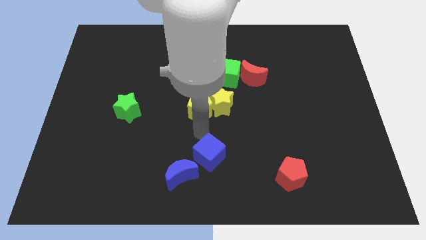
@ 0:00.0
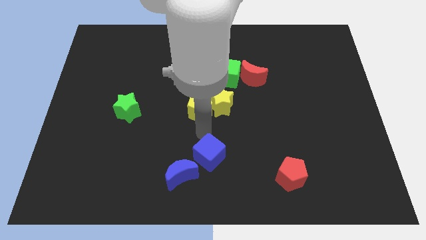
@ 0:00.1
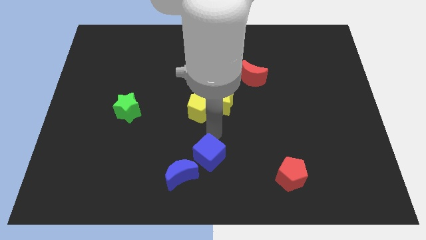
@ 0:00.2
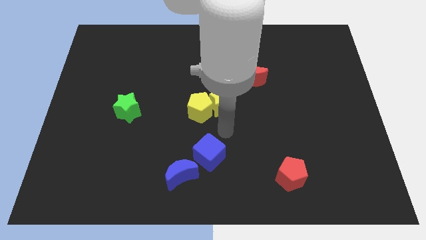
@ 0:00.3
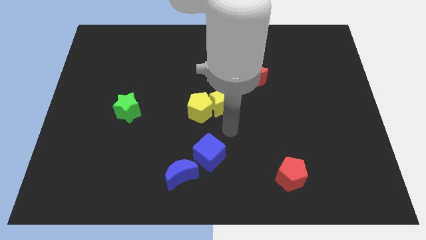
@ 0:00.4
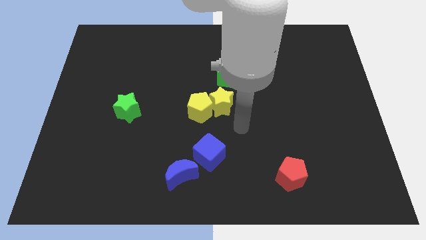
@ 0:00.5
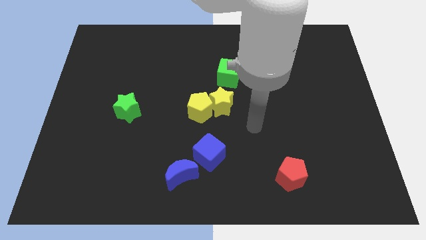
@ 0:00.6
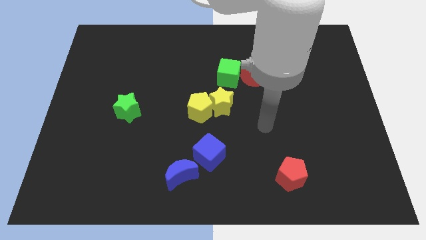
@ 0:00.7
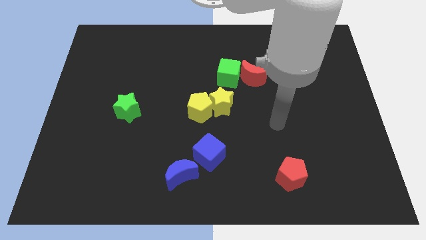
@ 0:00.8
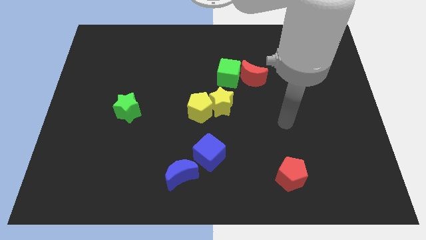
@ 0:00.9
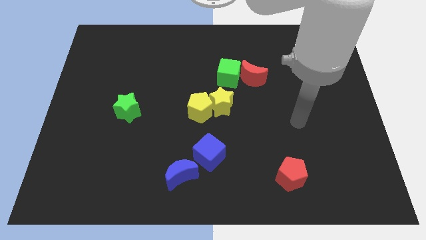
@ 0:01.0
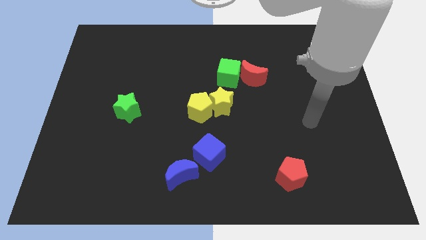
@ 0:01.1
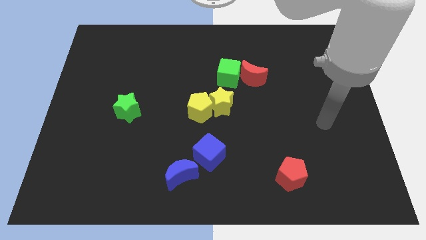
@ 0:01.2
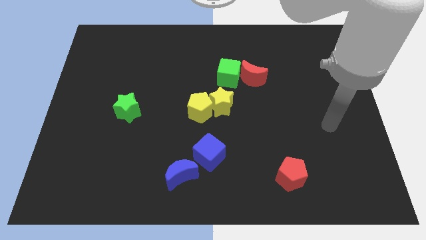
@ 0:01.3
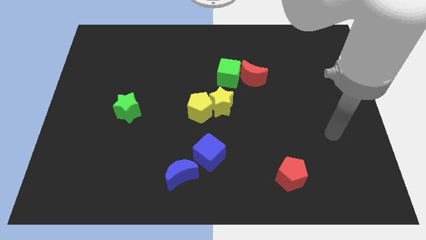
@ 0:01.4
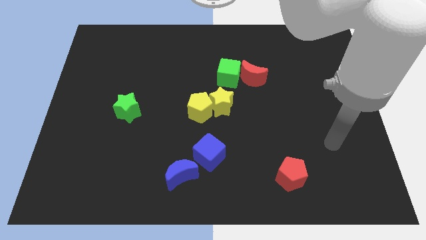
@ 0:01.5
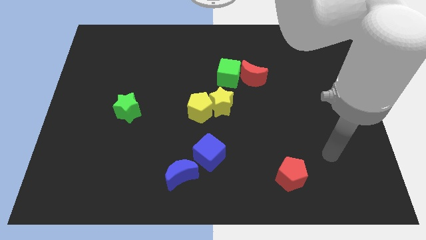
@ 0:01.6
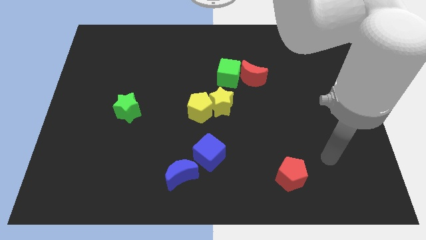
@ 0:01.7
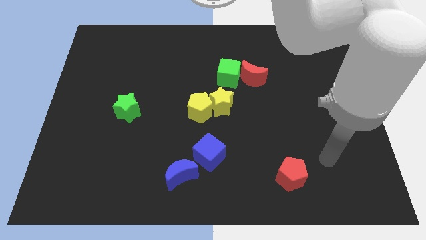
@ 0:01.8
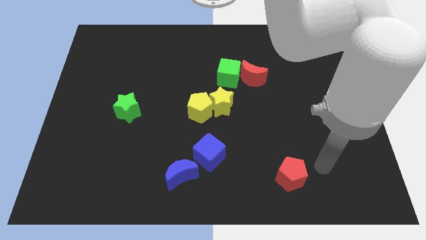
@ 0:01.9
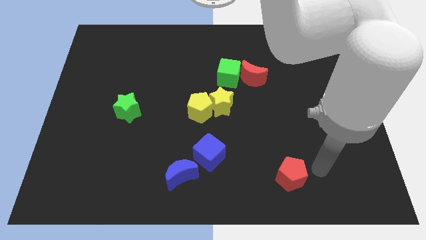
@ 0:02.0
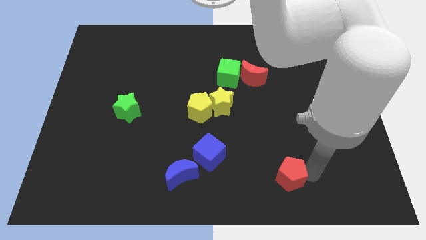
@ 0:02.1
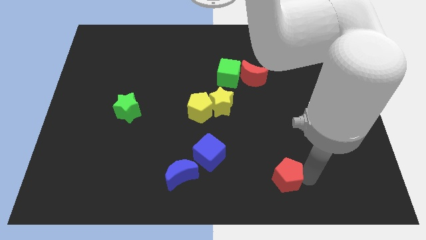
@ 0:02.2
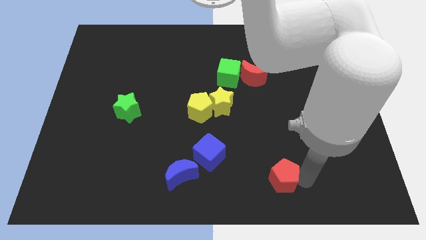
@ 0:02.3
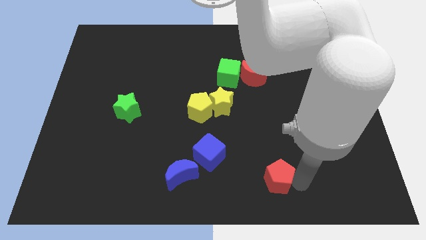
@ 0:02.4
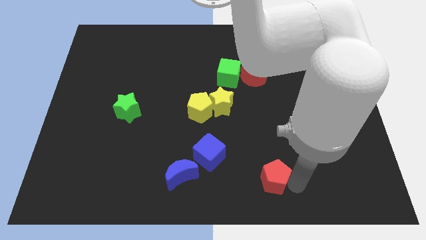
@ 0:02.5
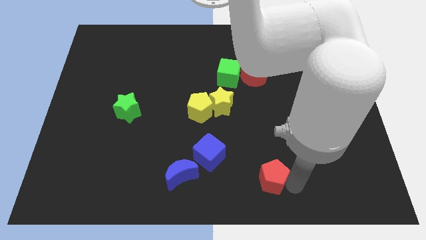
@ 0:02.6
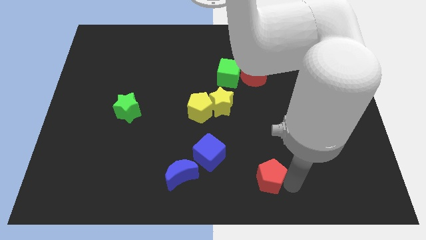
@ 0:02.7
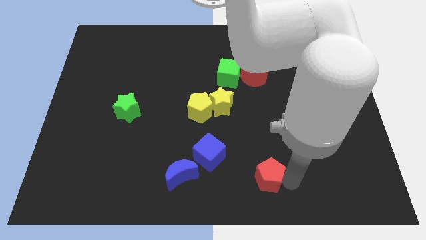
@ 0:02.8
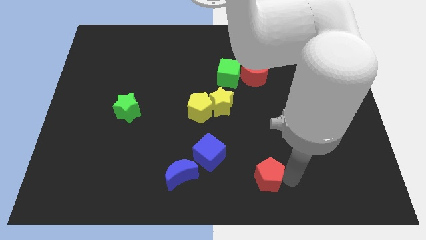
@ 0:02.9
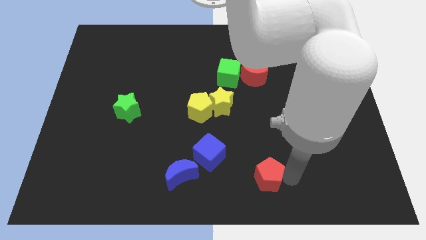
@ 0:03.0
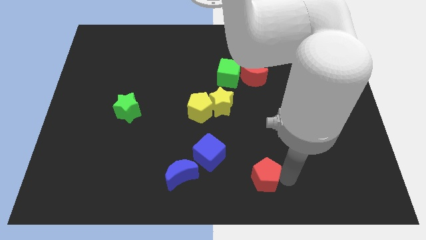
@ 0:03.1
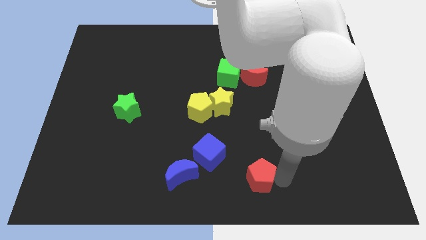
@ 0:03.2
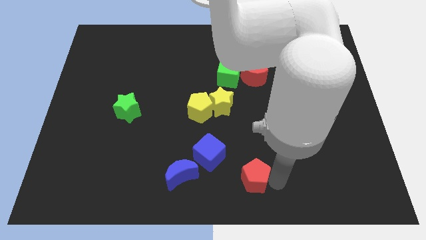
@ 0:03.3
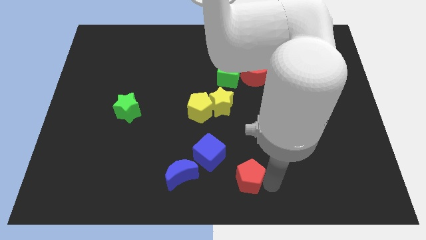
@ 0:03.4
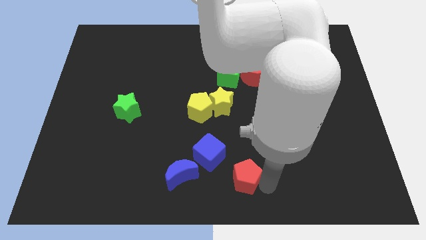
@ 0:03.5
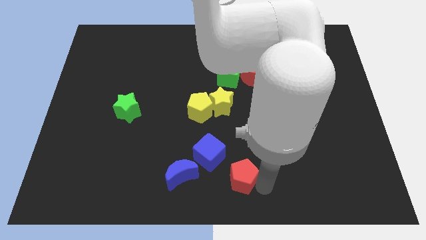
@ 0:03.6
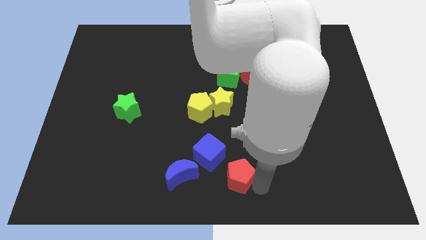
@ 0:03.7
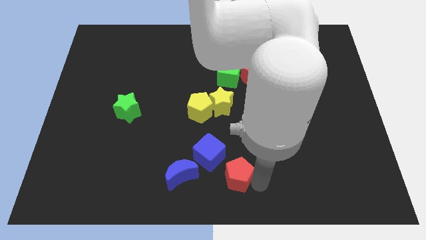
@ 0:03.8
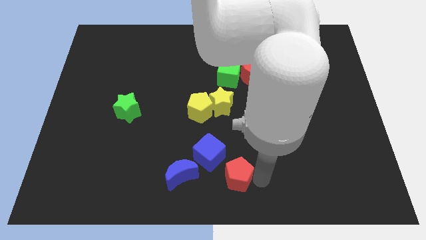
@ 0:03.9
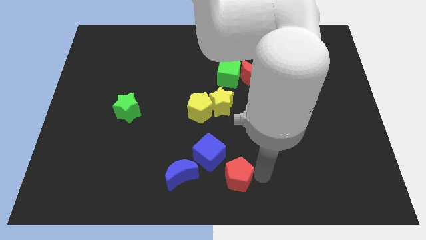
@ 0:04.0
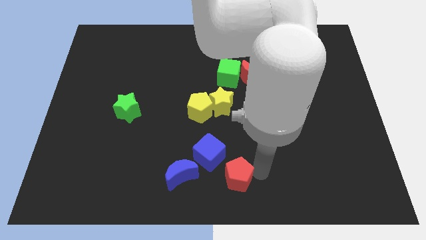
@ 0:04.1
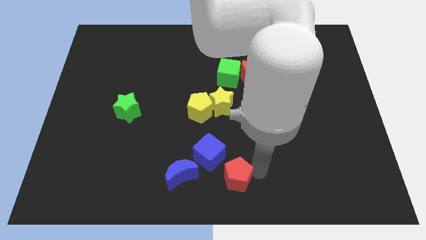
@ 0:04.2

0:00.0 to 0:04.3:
push the red pentagon to the right of the blue cube

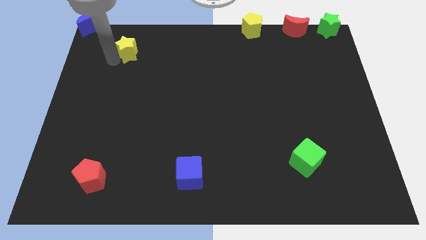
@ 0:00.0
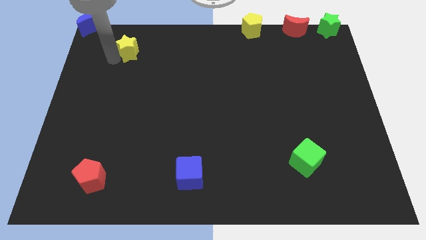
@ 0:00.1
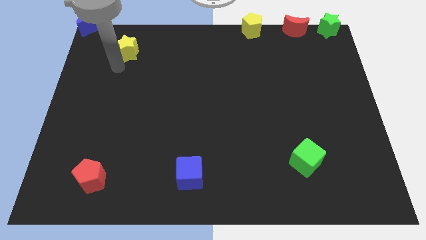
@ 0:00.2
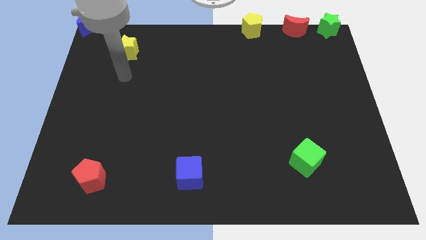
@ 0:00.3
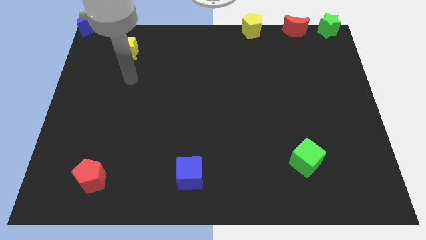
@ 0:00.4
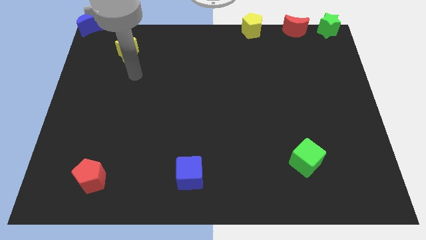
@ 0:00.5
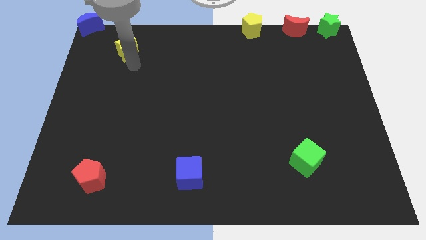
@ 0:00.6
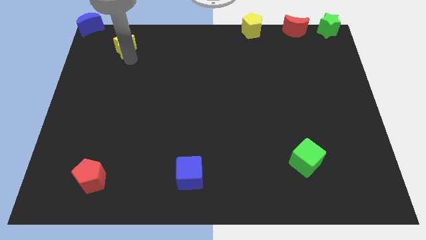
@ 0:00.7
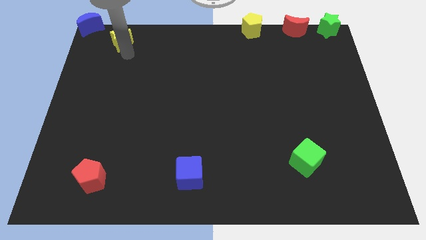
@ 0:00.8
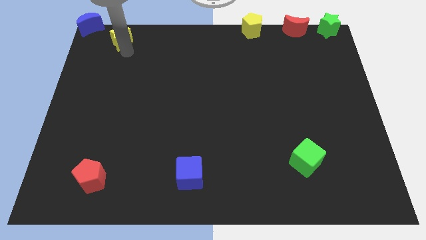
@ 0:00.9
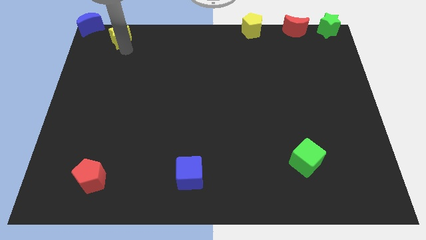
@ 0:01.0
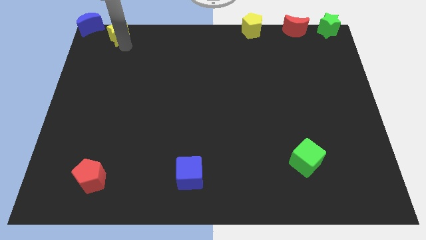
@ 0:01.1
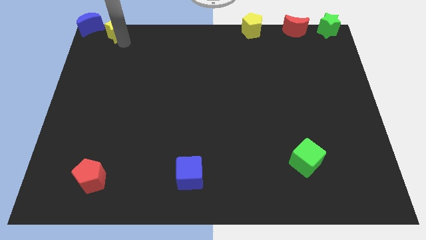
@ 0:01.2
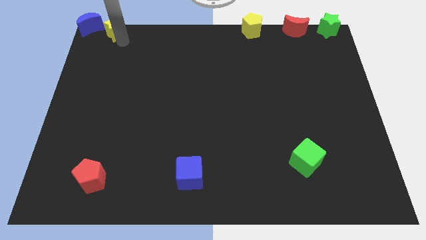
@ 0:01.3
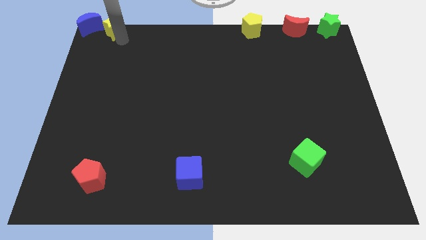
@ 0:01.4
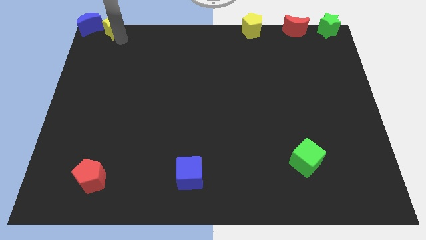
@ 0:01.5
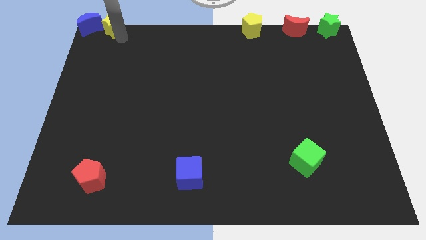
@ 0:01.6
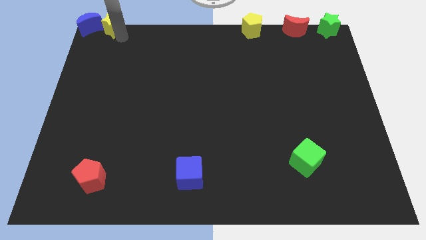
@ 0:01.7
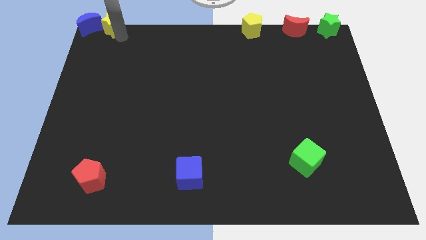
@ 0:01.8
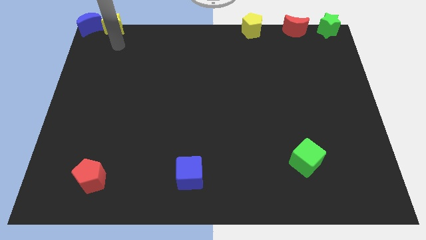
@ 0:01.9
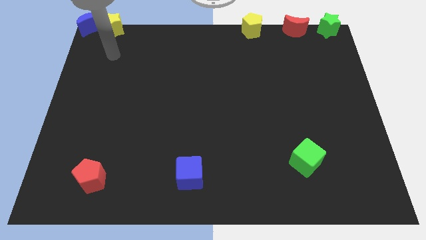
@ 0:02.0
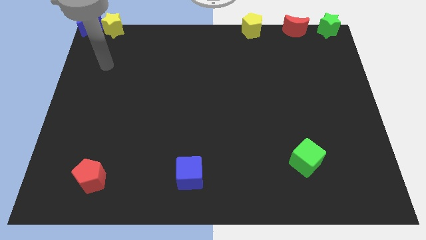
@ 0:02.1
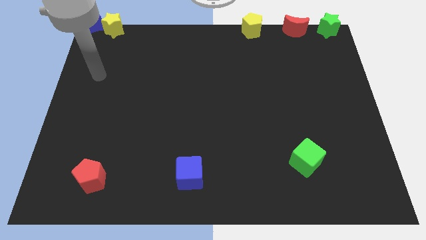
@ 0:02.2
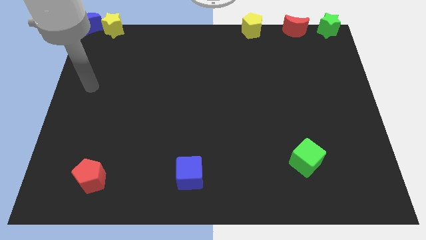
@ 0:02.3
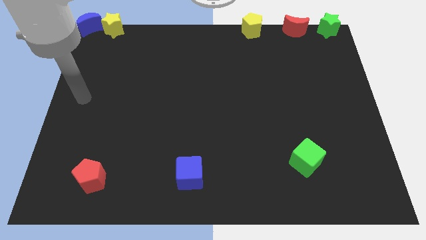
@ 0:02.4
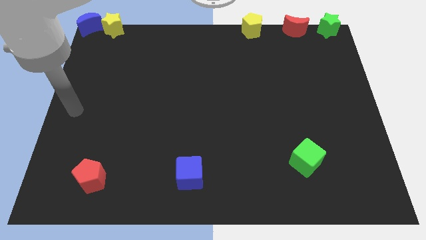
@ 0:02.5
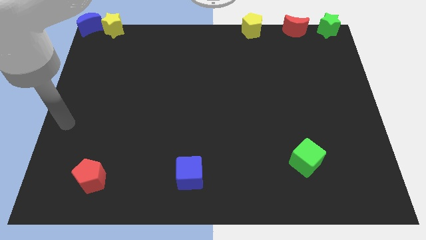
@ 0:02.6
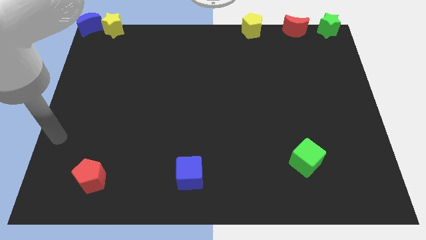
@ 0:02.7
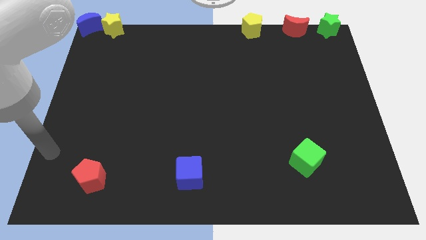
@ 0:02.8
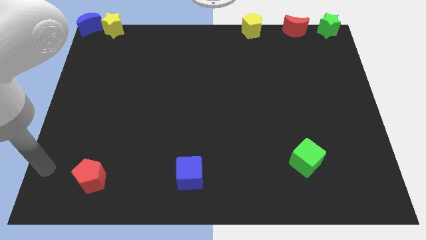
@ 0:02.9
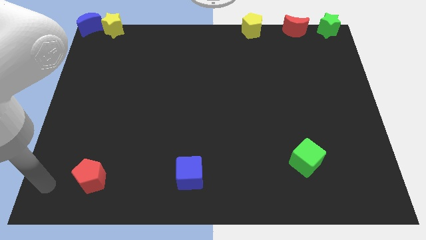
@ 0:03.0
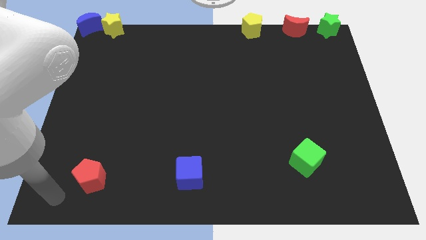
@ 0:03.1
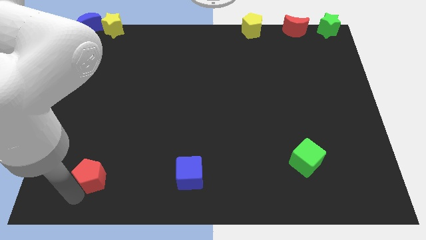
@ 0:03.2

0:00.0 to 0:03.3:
place the yellow star to the right side of the blue moon

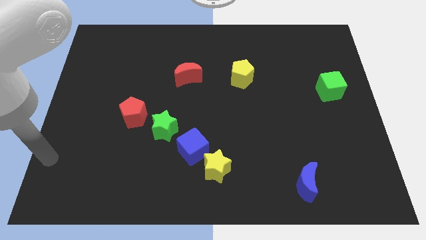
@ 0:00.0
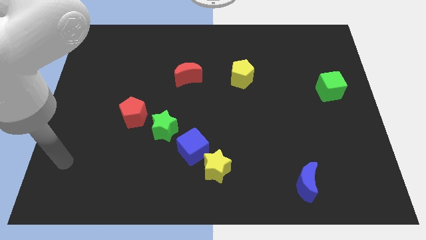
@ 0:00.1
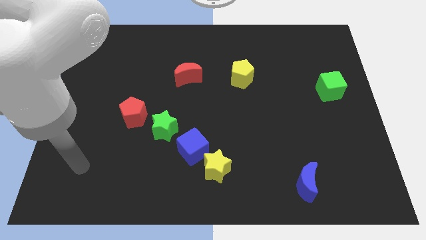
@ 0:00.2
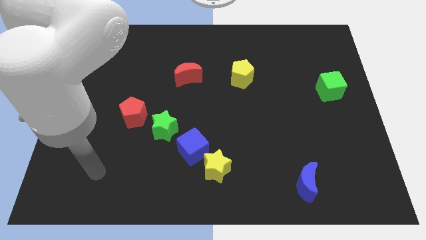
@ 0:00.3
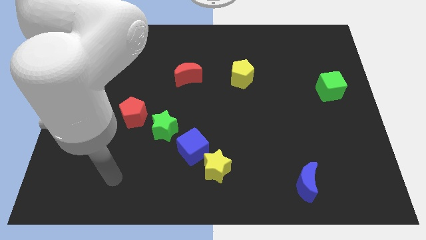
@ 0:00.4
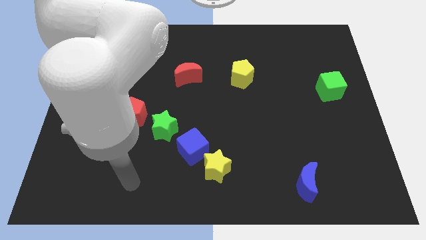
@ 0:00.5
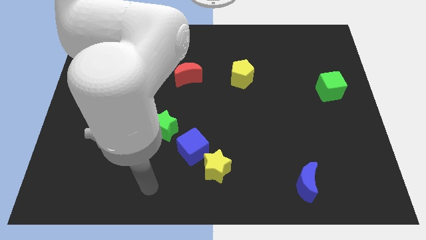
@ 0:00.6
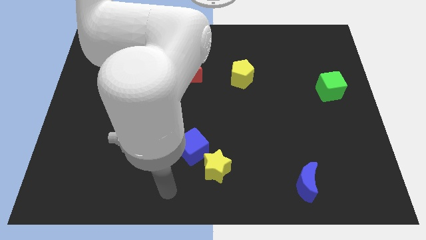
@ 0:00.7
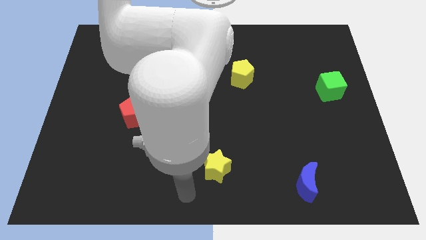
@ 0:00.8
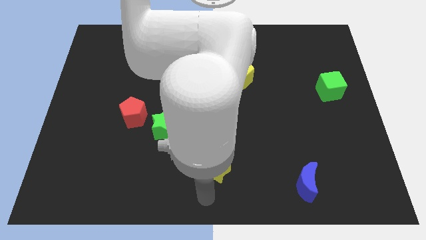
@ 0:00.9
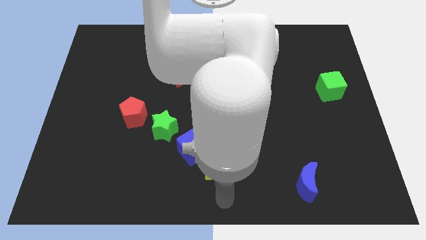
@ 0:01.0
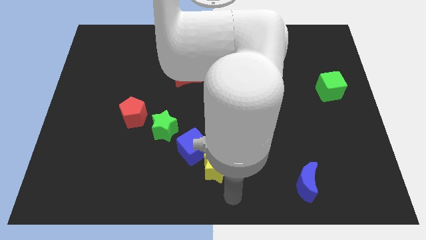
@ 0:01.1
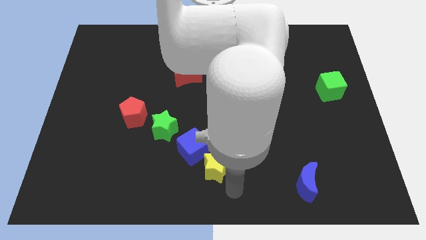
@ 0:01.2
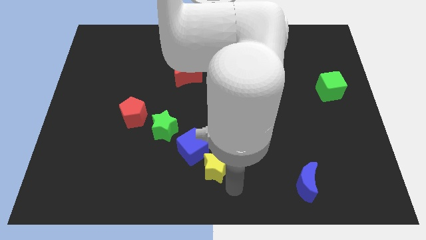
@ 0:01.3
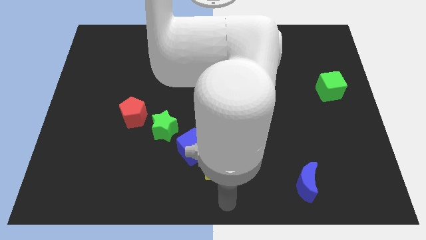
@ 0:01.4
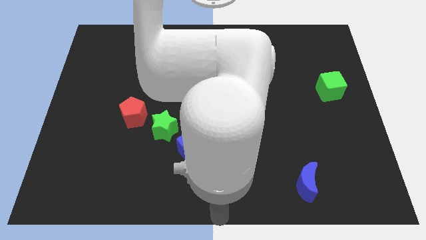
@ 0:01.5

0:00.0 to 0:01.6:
move your hand to the bottom center
